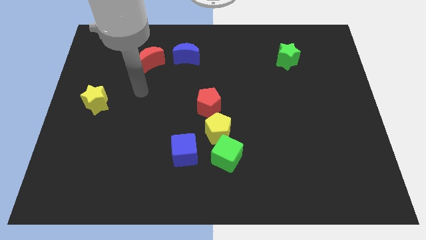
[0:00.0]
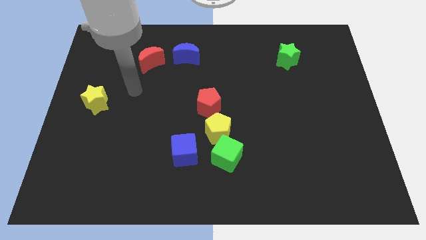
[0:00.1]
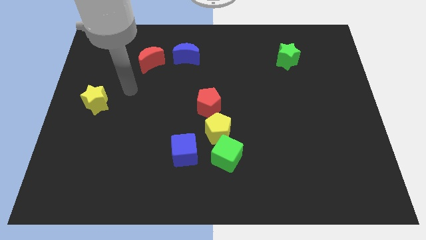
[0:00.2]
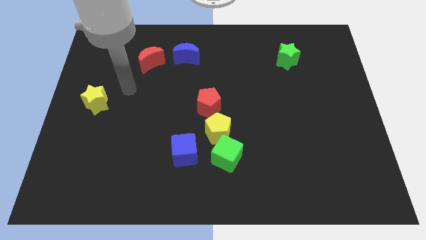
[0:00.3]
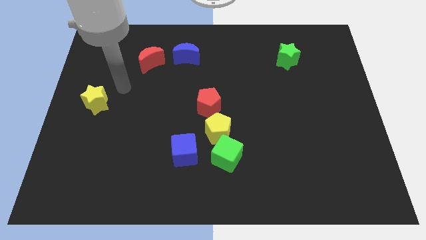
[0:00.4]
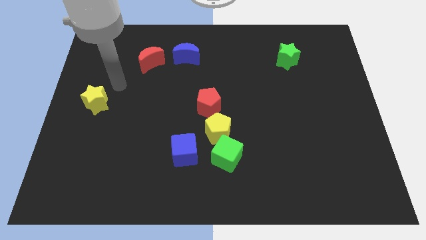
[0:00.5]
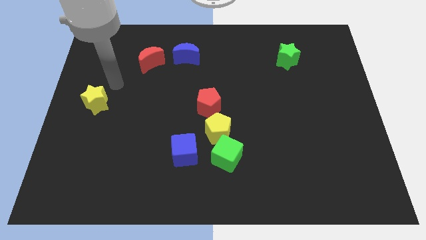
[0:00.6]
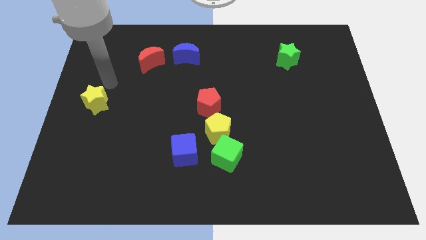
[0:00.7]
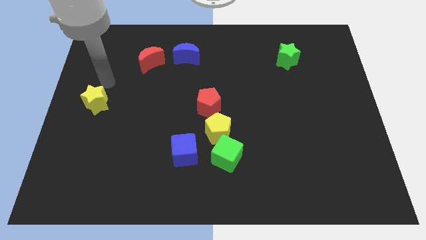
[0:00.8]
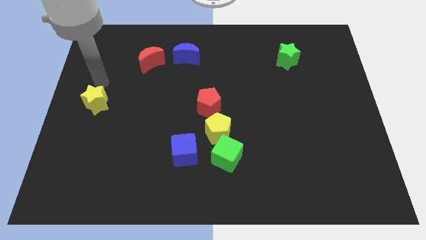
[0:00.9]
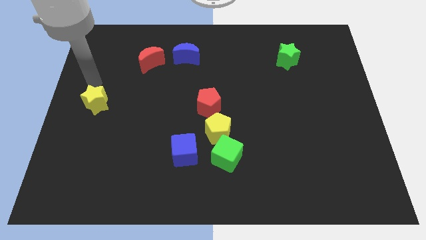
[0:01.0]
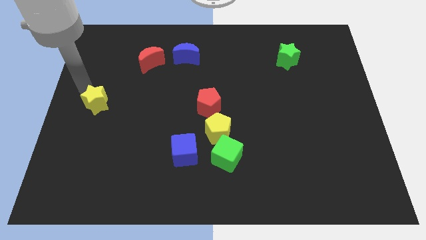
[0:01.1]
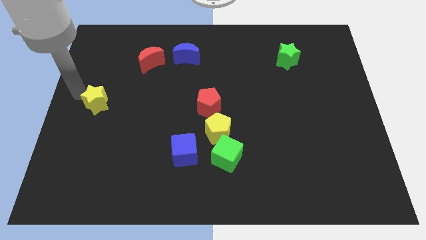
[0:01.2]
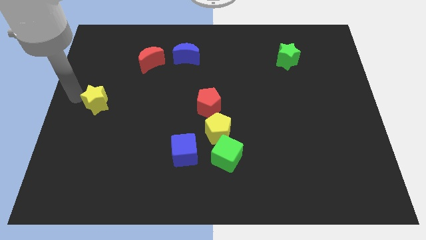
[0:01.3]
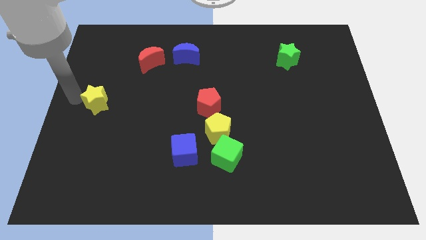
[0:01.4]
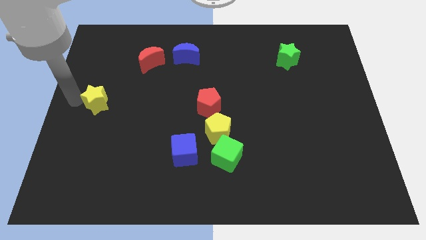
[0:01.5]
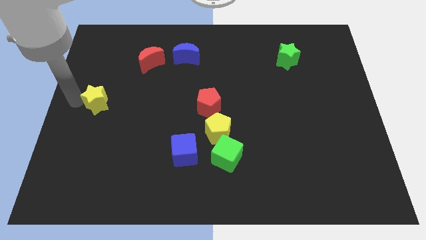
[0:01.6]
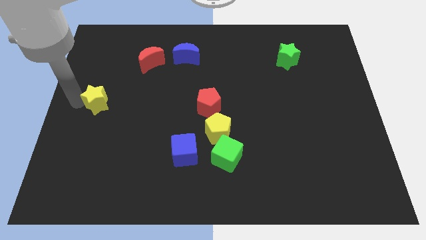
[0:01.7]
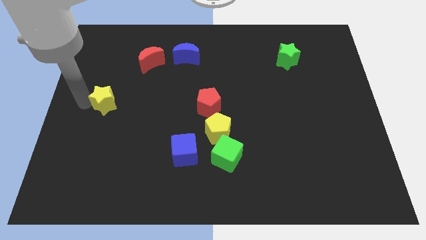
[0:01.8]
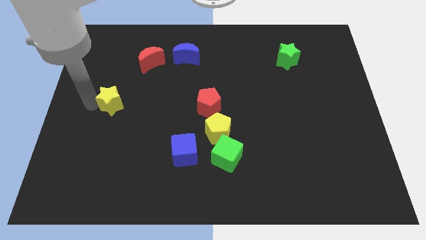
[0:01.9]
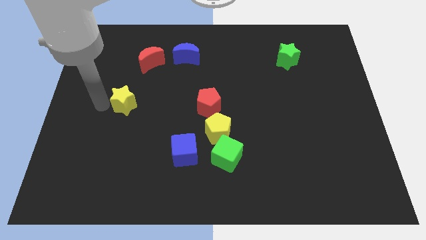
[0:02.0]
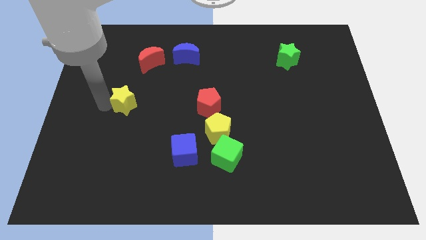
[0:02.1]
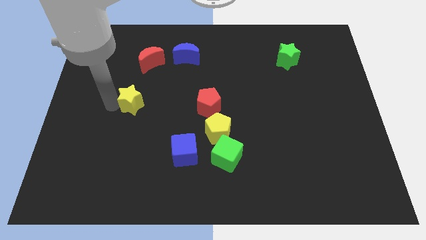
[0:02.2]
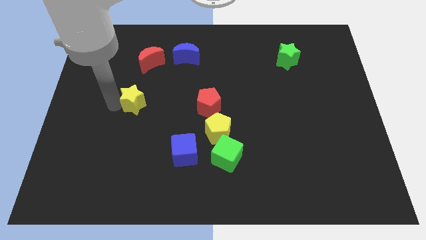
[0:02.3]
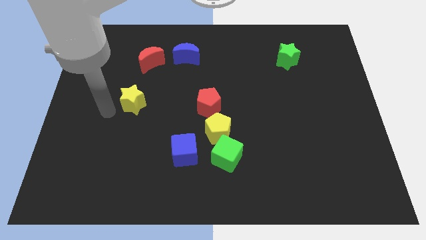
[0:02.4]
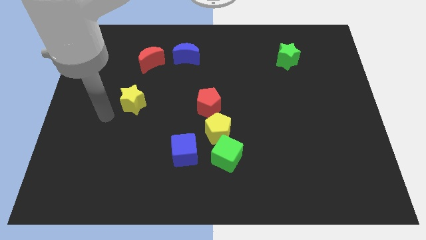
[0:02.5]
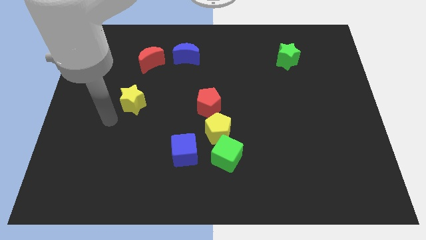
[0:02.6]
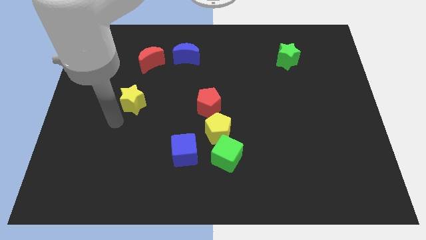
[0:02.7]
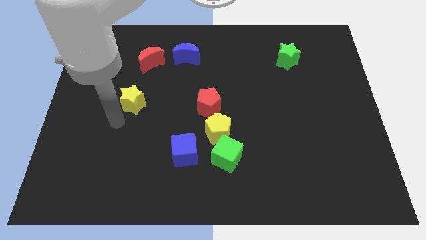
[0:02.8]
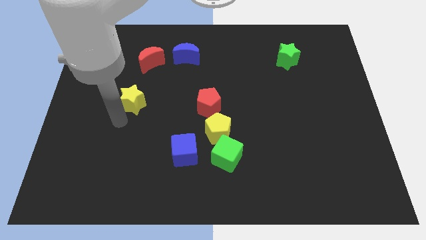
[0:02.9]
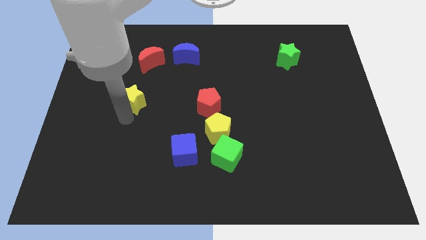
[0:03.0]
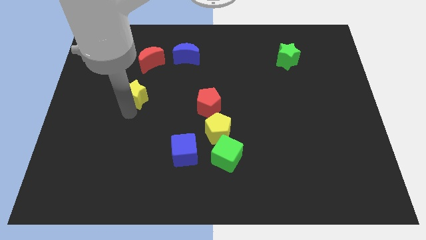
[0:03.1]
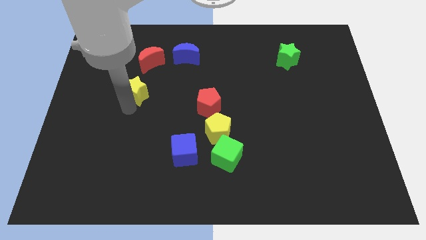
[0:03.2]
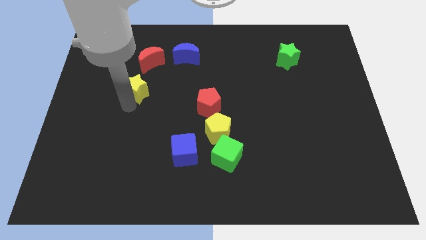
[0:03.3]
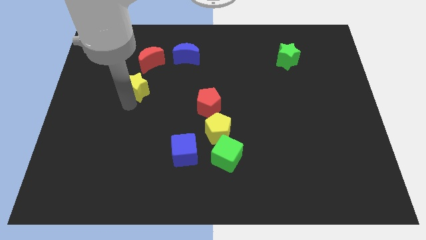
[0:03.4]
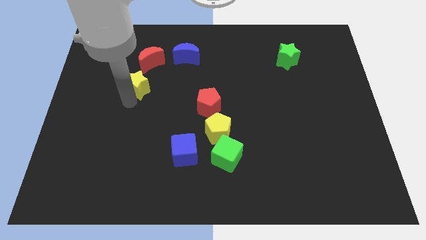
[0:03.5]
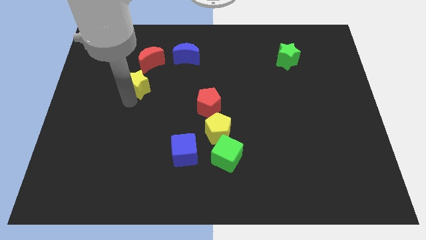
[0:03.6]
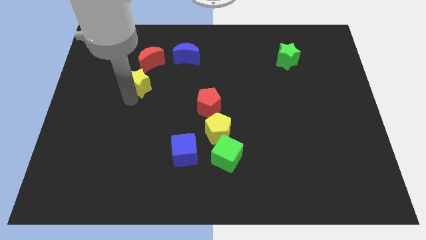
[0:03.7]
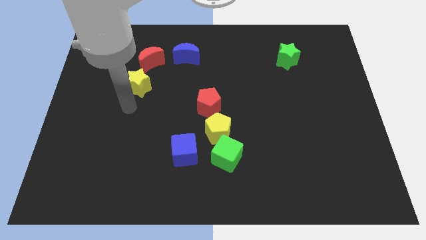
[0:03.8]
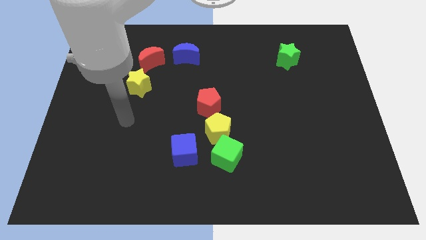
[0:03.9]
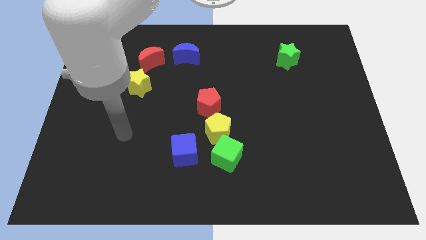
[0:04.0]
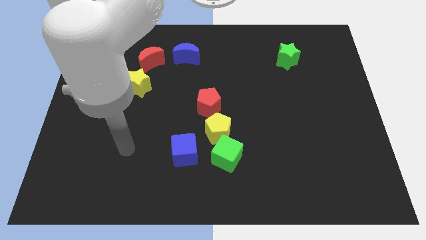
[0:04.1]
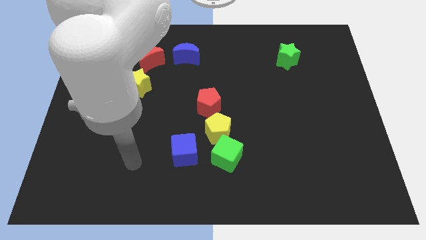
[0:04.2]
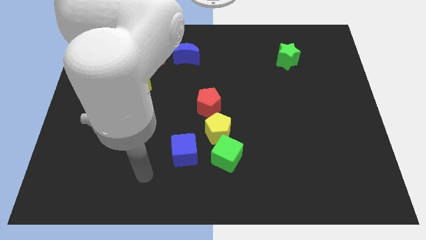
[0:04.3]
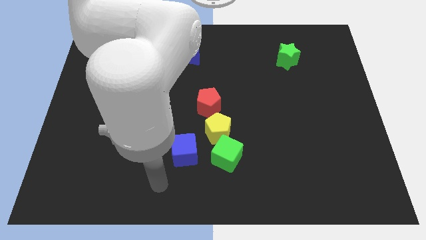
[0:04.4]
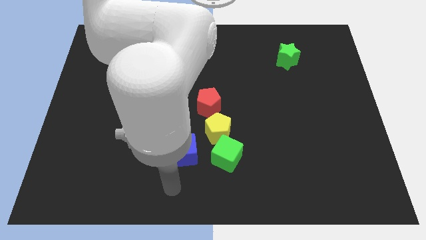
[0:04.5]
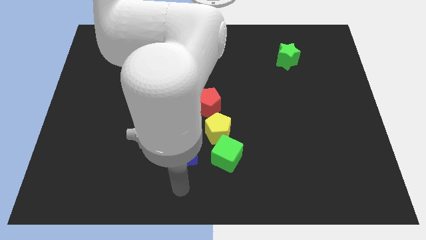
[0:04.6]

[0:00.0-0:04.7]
place the yellow star to the bottom left of red moon

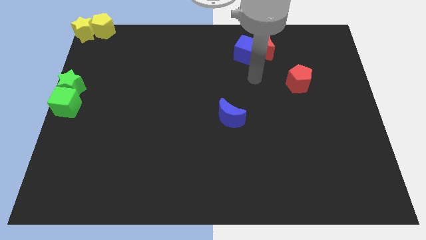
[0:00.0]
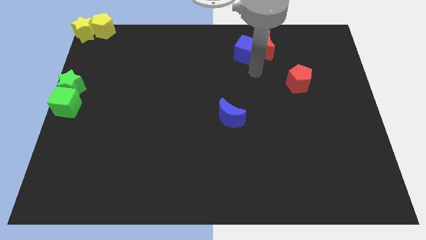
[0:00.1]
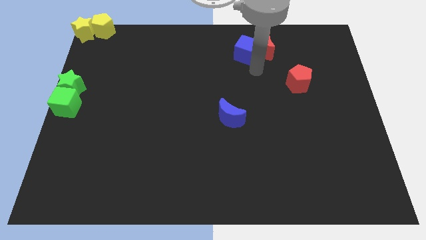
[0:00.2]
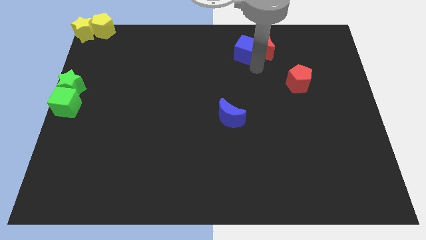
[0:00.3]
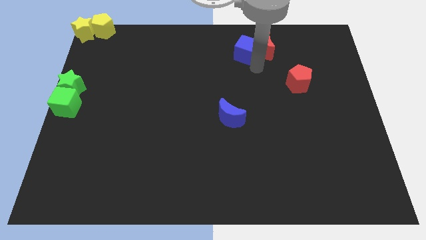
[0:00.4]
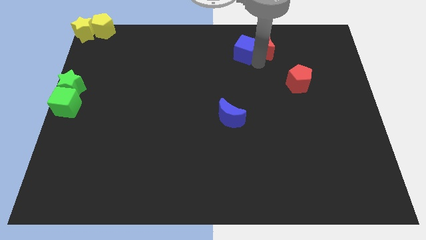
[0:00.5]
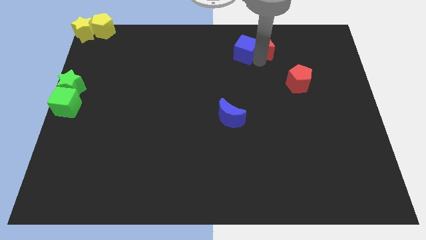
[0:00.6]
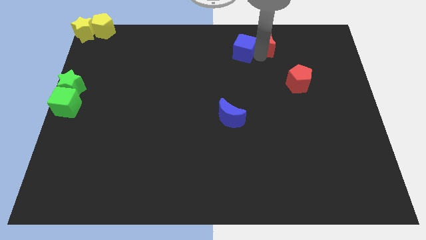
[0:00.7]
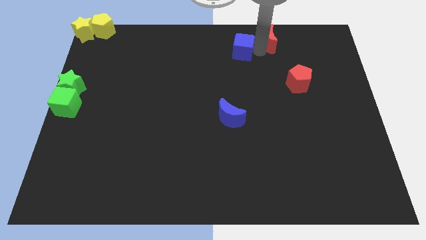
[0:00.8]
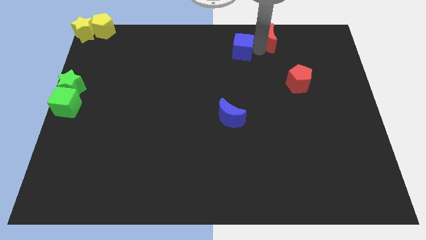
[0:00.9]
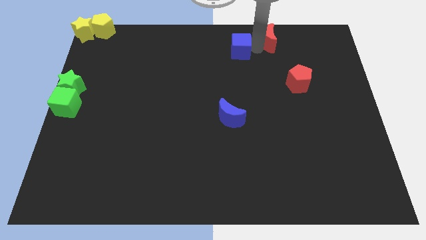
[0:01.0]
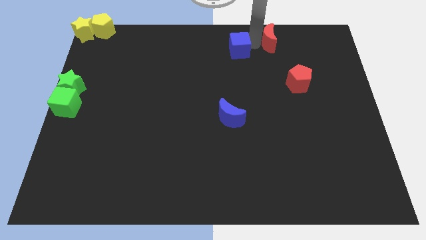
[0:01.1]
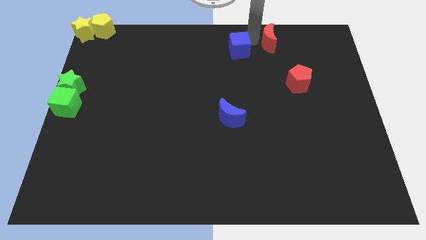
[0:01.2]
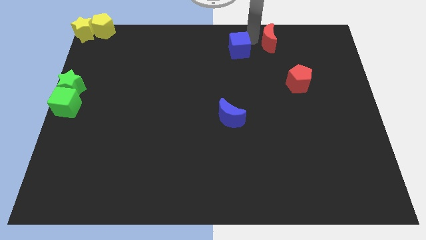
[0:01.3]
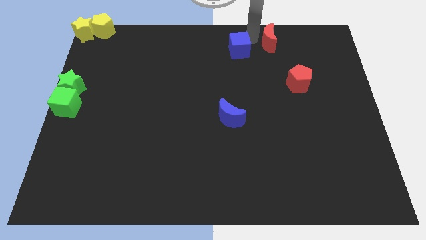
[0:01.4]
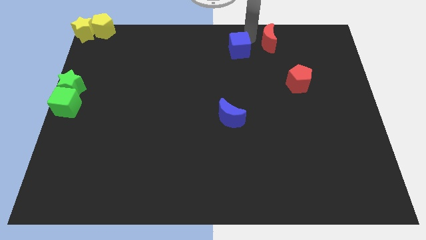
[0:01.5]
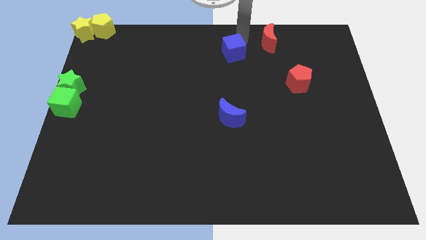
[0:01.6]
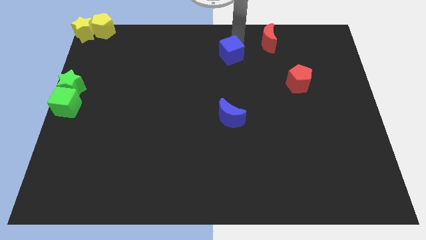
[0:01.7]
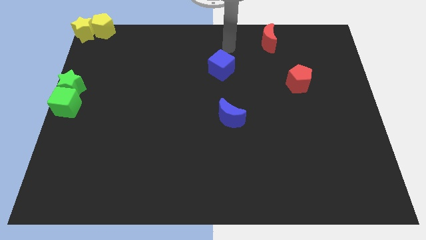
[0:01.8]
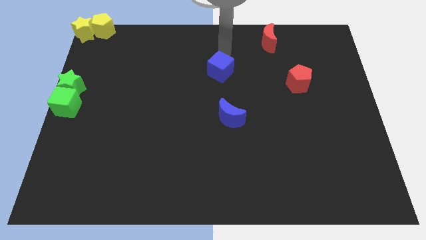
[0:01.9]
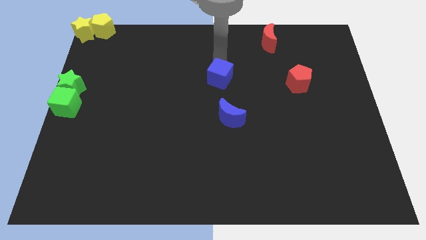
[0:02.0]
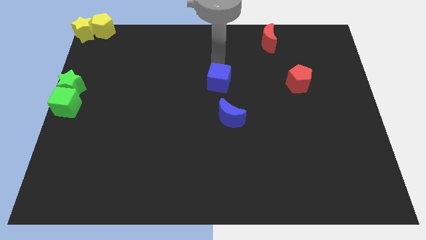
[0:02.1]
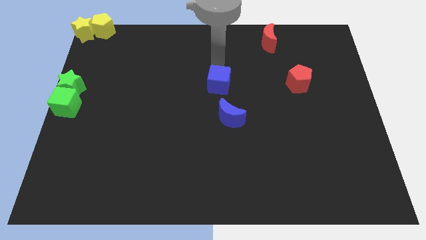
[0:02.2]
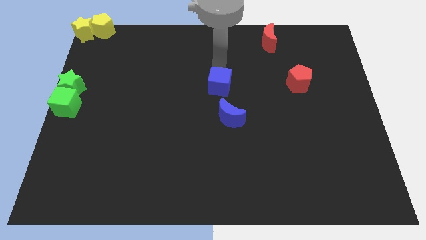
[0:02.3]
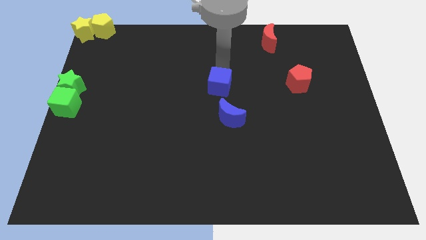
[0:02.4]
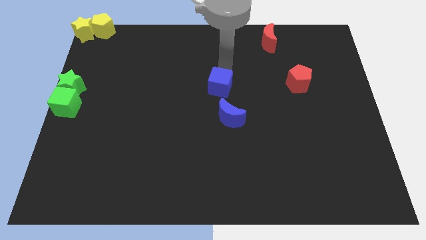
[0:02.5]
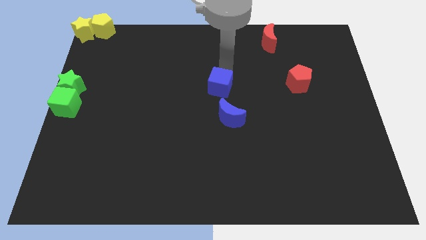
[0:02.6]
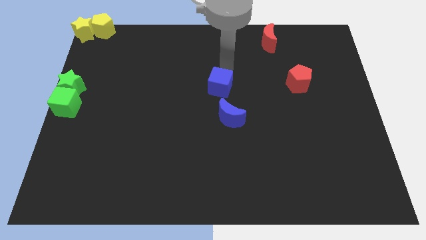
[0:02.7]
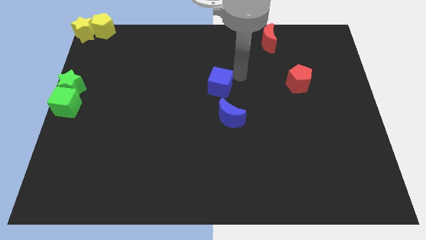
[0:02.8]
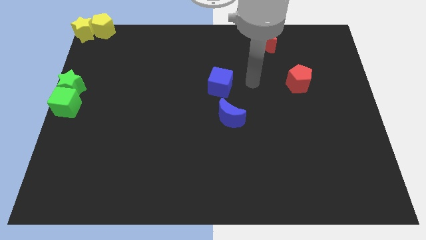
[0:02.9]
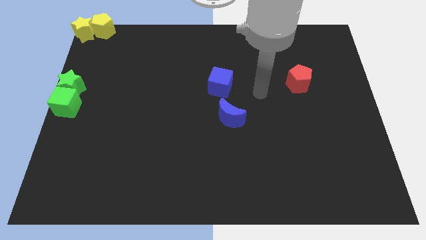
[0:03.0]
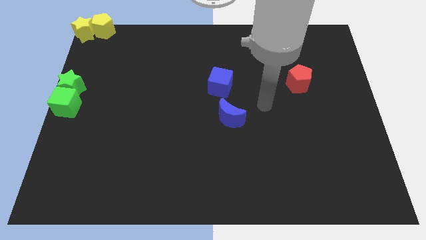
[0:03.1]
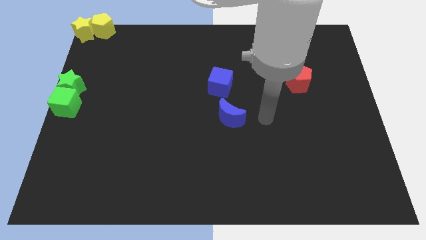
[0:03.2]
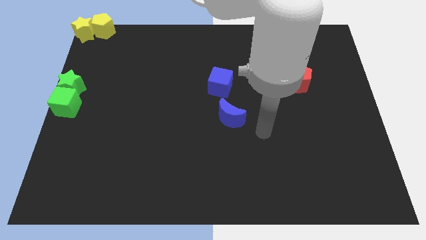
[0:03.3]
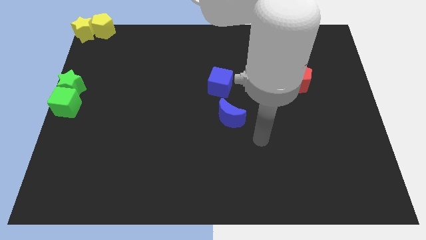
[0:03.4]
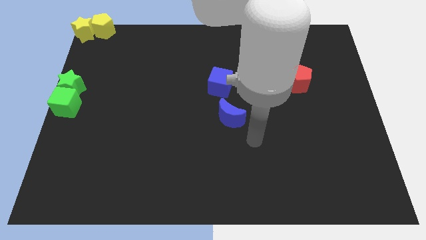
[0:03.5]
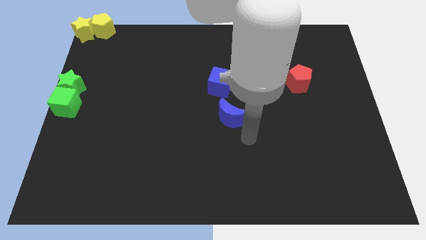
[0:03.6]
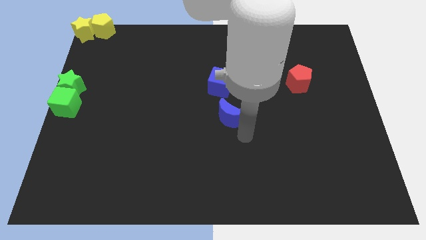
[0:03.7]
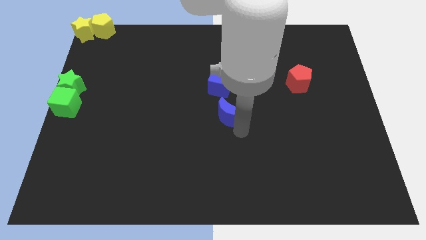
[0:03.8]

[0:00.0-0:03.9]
move the blue cube towards the blue moon

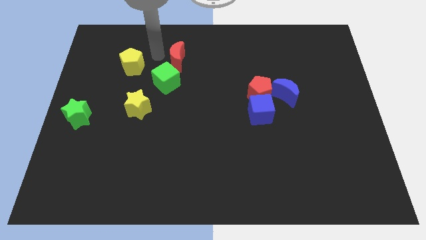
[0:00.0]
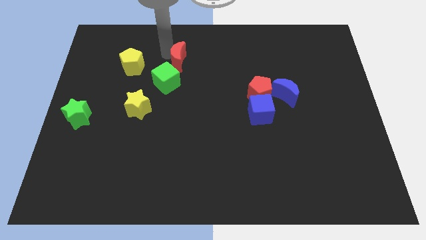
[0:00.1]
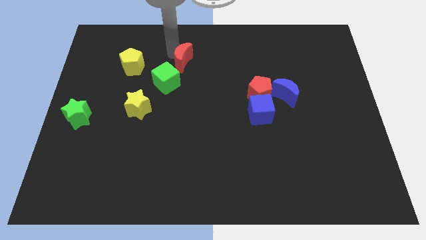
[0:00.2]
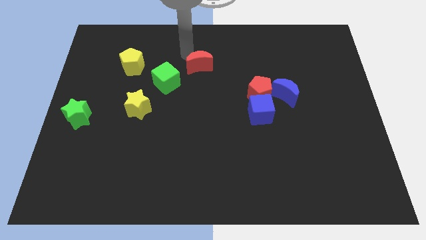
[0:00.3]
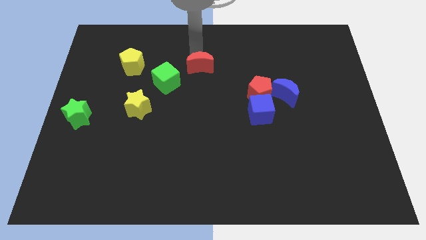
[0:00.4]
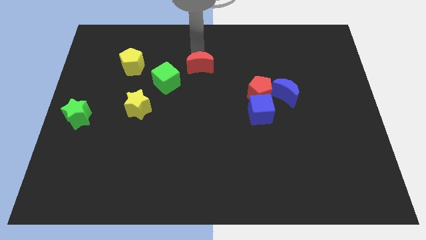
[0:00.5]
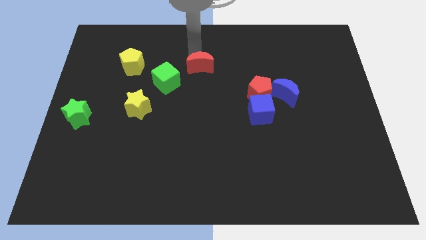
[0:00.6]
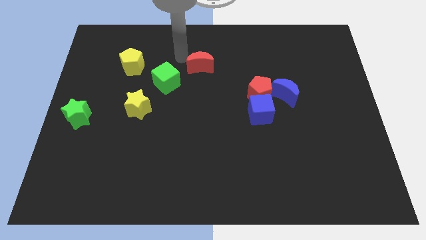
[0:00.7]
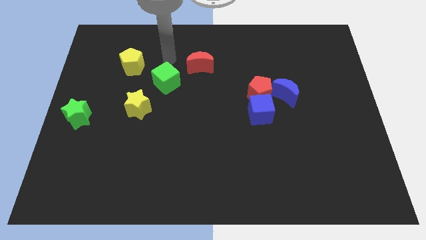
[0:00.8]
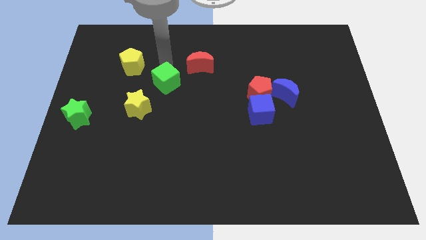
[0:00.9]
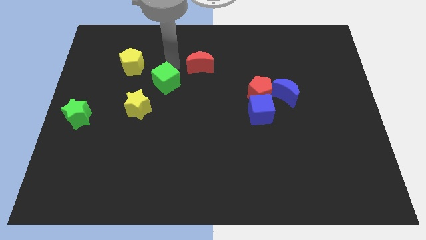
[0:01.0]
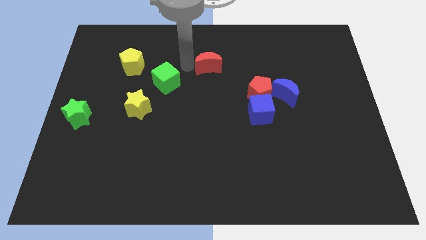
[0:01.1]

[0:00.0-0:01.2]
move slightly the red crescent to the right
